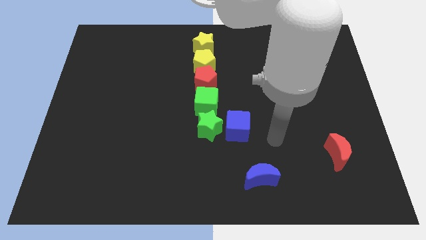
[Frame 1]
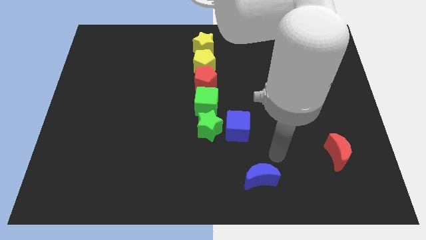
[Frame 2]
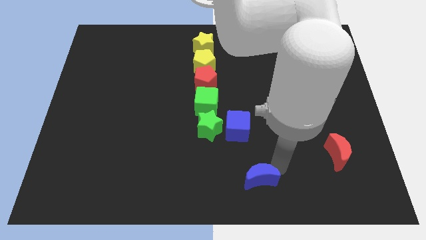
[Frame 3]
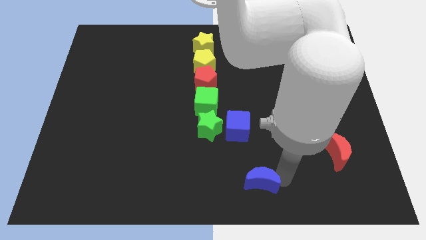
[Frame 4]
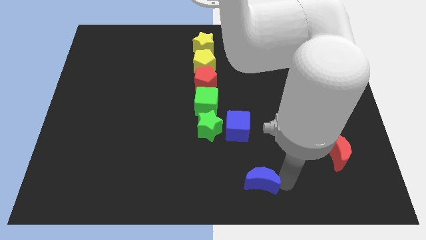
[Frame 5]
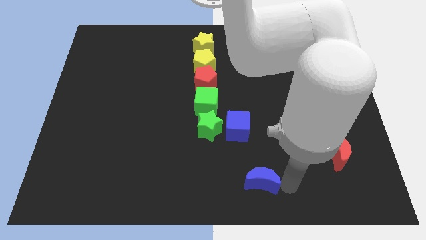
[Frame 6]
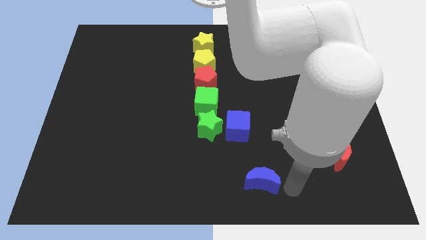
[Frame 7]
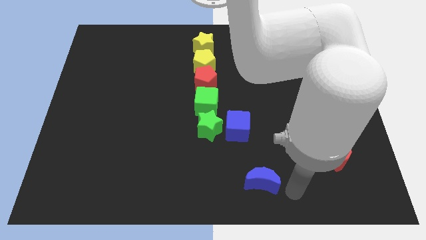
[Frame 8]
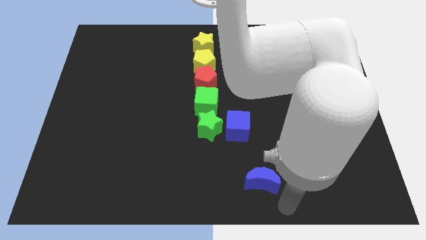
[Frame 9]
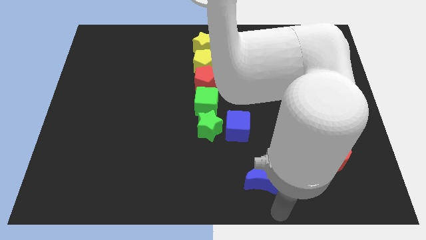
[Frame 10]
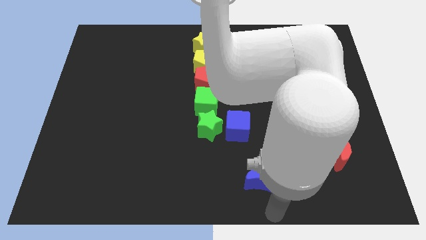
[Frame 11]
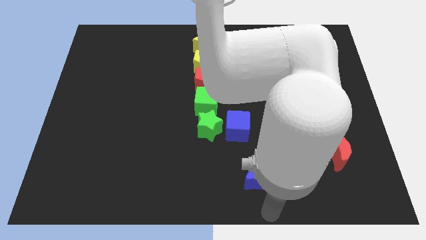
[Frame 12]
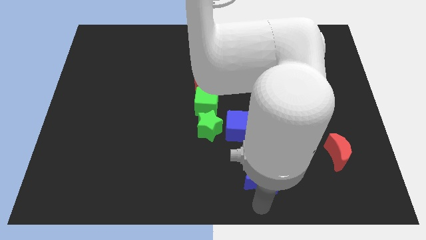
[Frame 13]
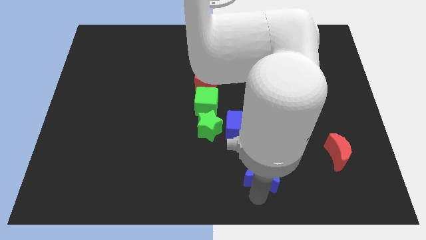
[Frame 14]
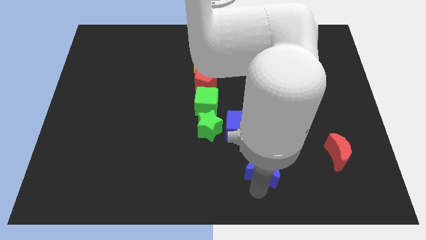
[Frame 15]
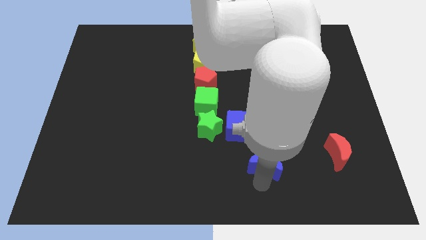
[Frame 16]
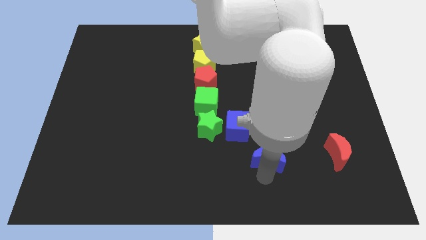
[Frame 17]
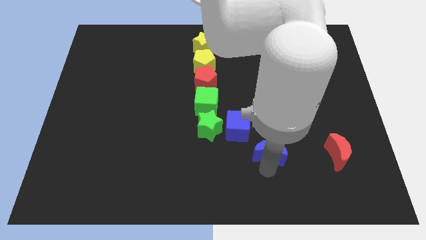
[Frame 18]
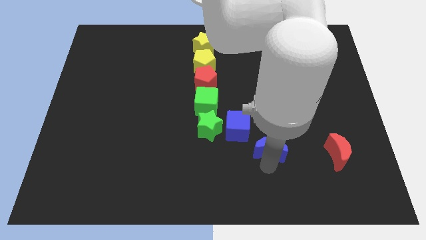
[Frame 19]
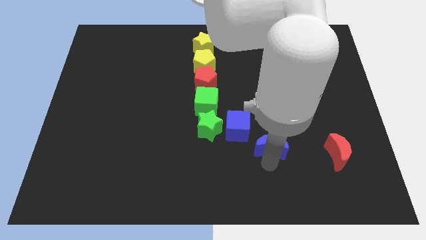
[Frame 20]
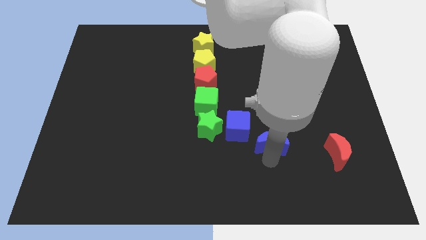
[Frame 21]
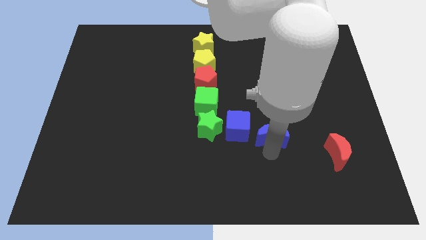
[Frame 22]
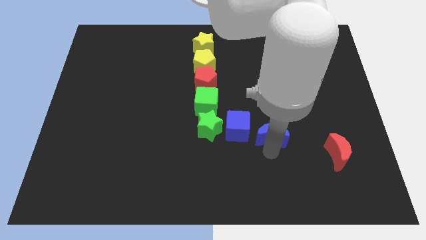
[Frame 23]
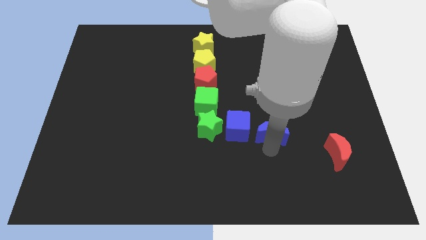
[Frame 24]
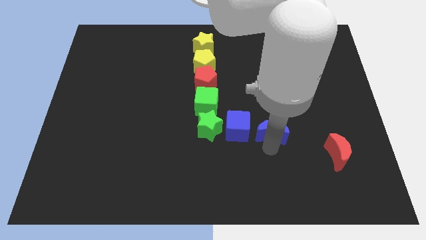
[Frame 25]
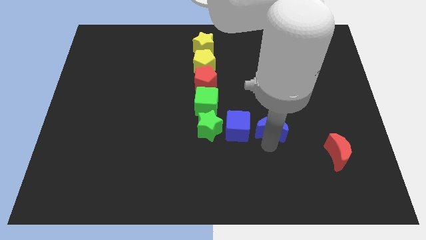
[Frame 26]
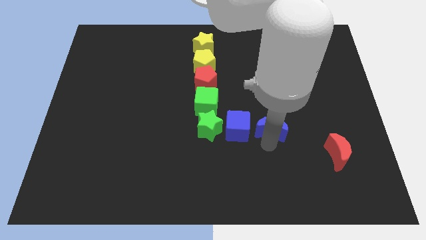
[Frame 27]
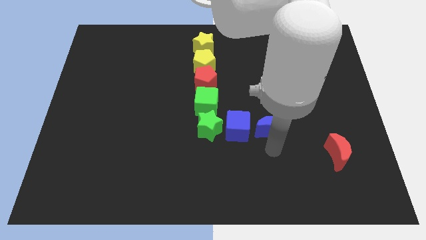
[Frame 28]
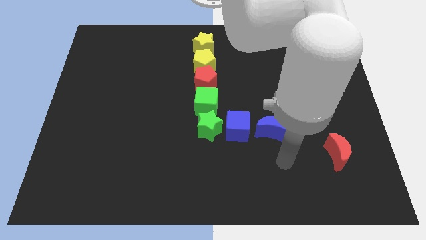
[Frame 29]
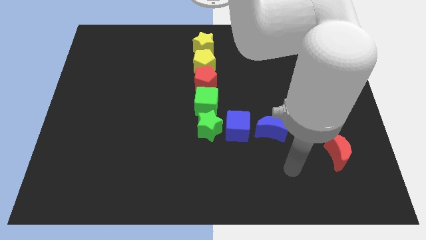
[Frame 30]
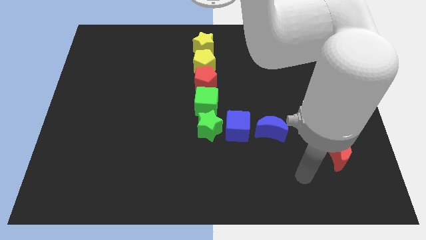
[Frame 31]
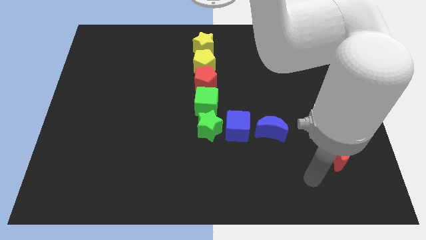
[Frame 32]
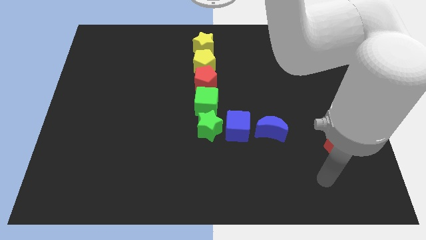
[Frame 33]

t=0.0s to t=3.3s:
push the blue moon parallel right to the blue cube

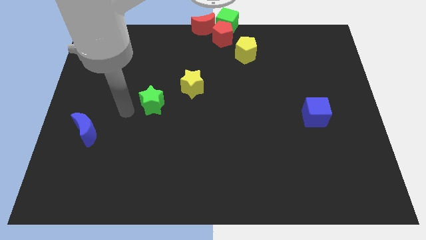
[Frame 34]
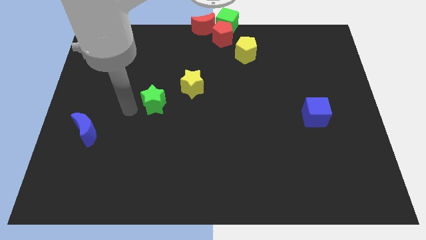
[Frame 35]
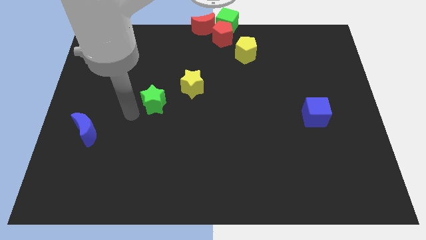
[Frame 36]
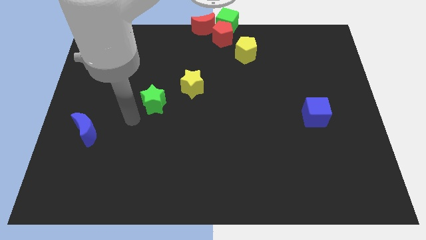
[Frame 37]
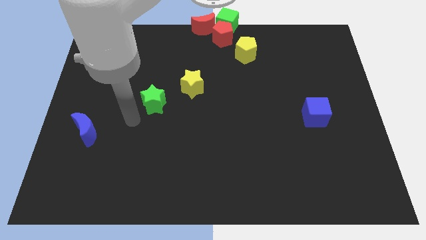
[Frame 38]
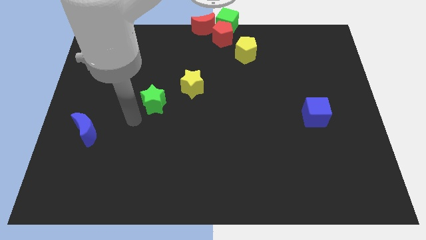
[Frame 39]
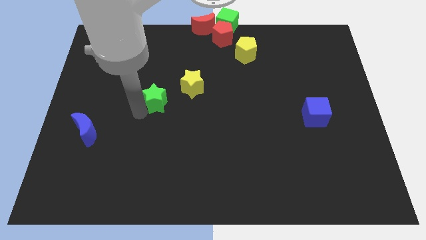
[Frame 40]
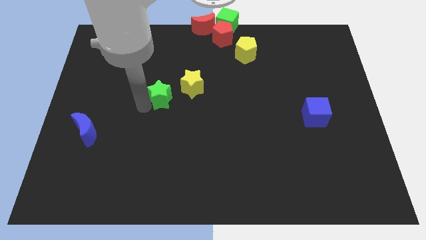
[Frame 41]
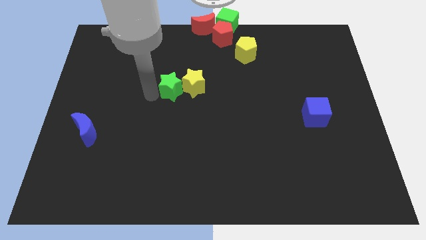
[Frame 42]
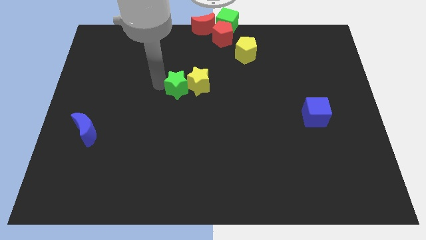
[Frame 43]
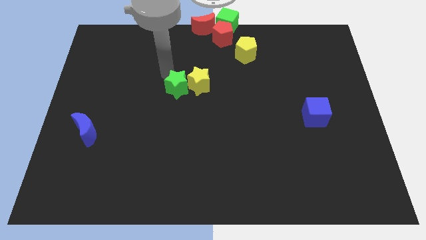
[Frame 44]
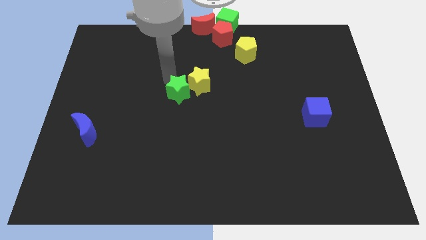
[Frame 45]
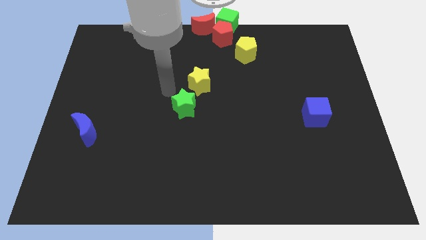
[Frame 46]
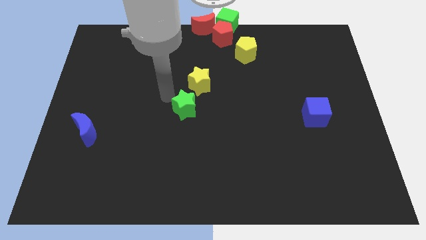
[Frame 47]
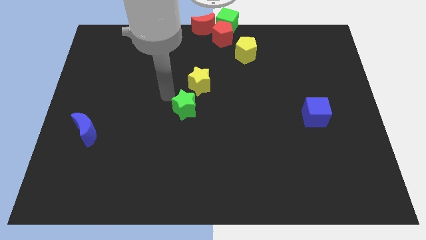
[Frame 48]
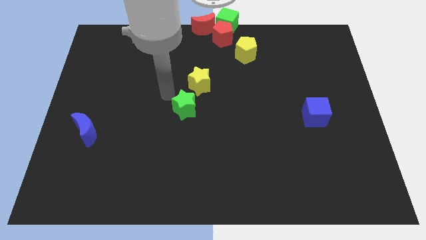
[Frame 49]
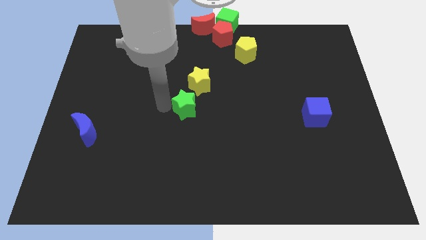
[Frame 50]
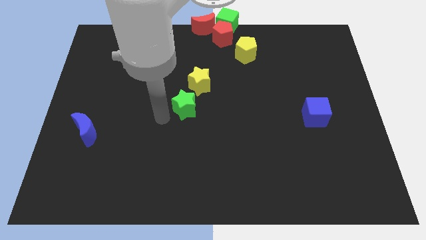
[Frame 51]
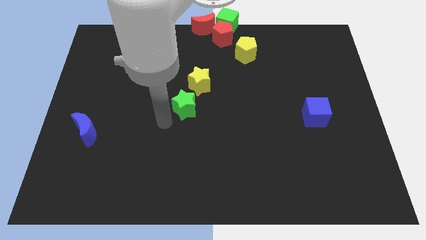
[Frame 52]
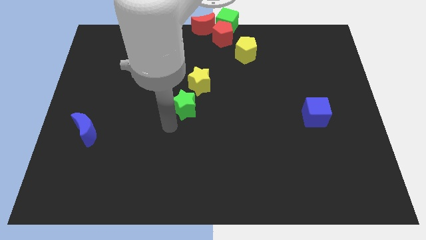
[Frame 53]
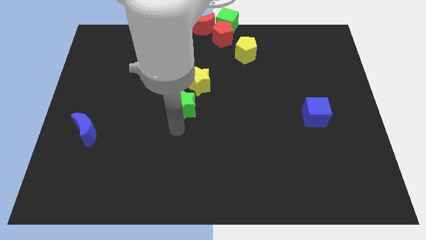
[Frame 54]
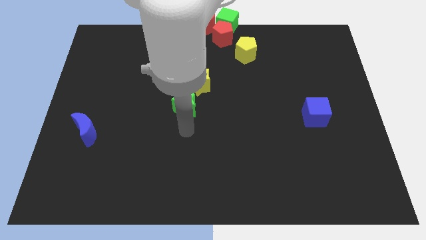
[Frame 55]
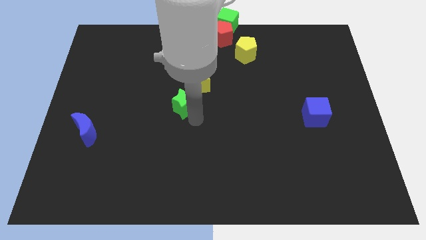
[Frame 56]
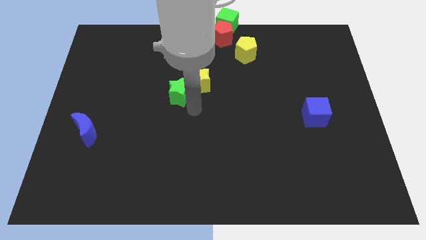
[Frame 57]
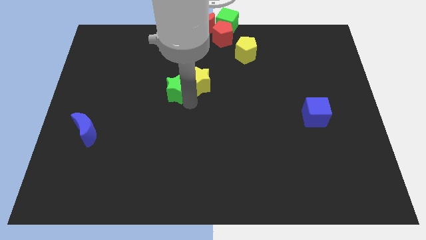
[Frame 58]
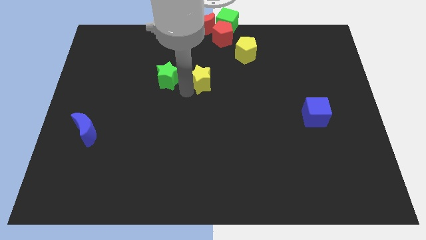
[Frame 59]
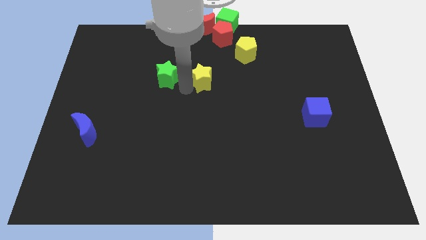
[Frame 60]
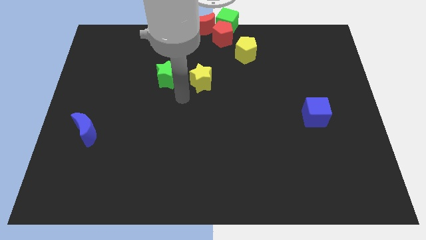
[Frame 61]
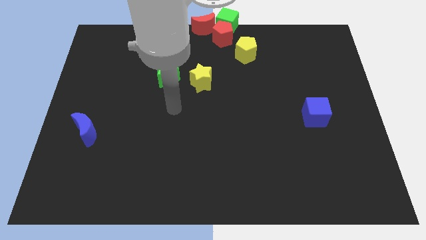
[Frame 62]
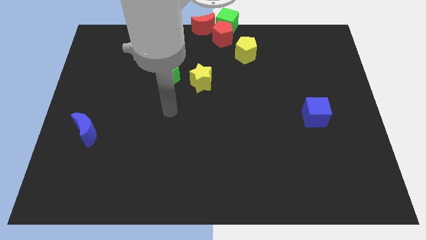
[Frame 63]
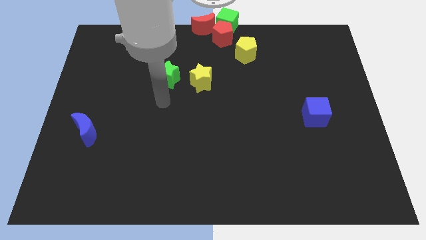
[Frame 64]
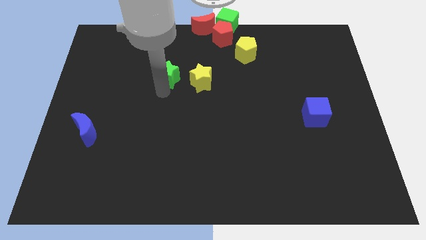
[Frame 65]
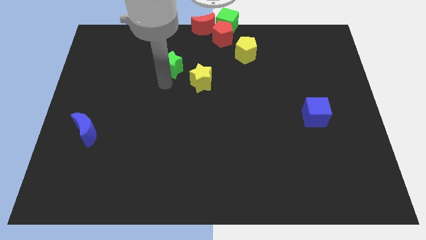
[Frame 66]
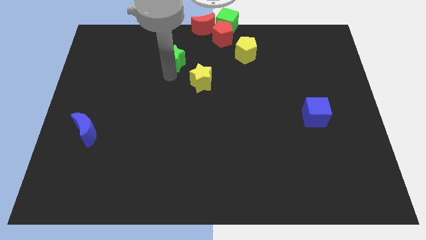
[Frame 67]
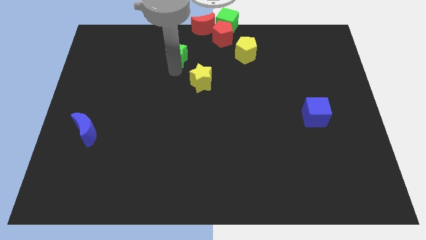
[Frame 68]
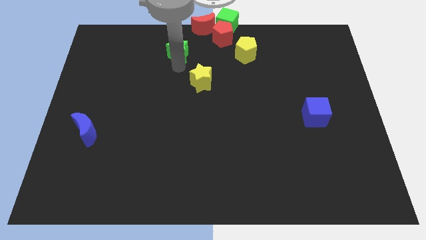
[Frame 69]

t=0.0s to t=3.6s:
place the green star parallel to the left side of the yellow pentagon

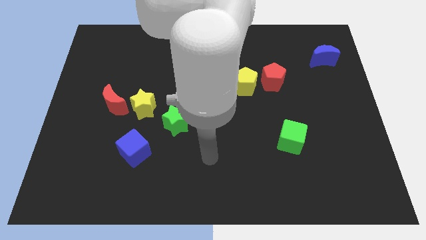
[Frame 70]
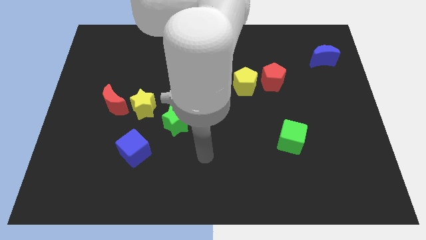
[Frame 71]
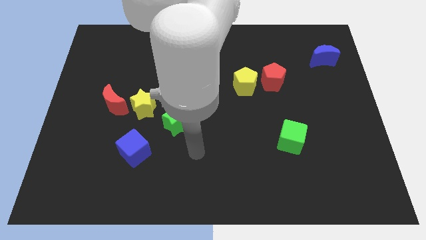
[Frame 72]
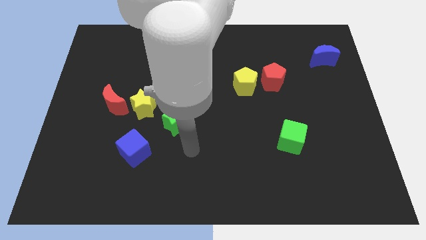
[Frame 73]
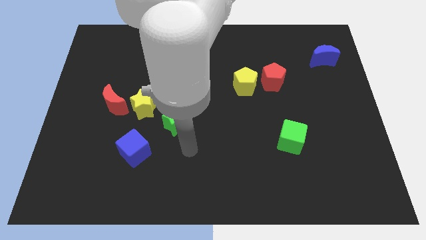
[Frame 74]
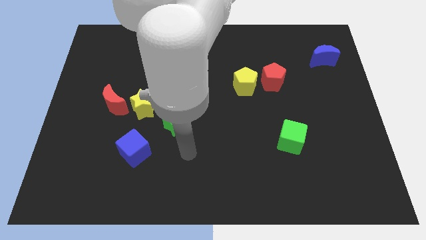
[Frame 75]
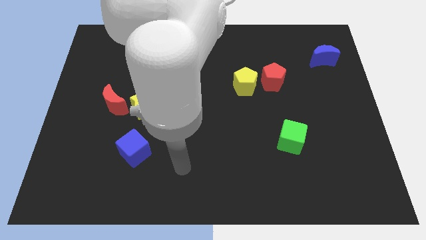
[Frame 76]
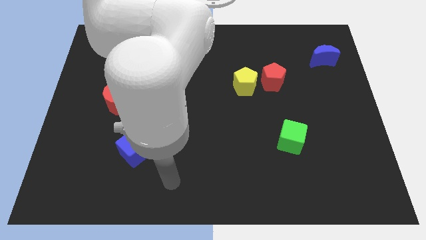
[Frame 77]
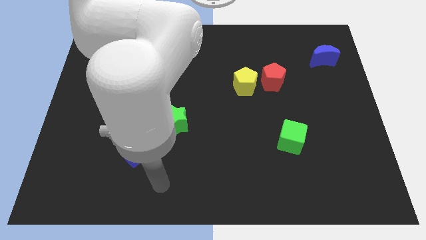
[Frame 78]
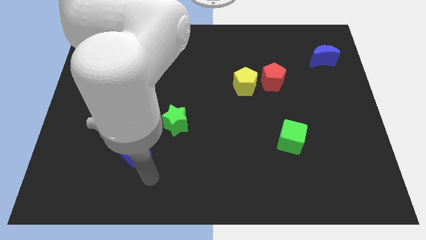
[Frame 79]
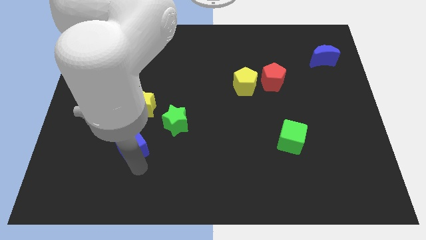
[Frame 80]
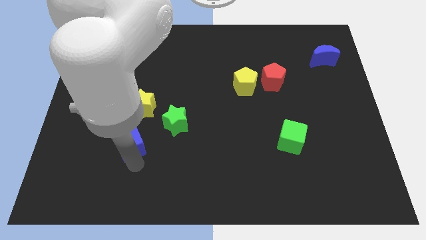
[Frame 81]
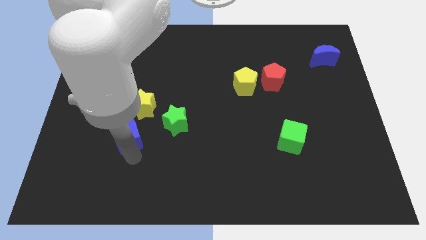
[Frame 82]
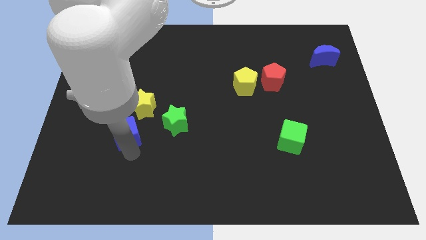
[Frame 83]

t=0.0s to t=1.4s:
move the blue cube towards top of the board

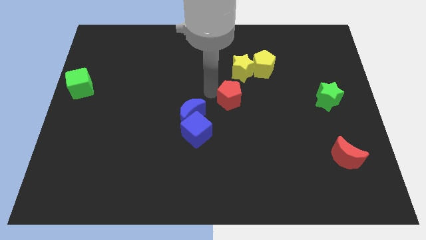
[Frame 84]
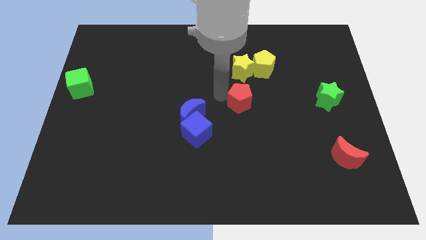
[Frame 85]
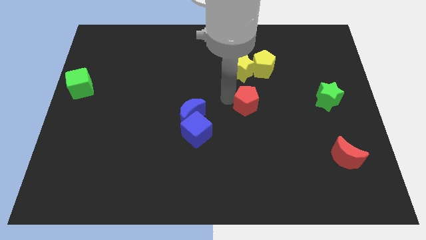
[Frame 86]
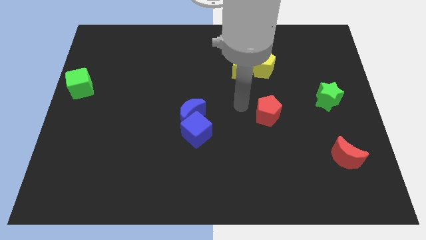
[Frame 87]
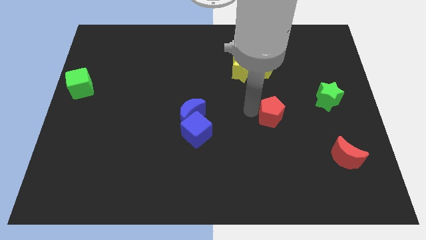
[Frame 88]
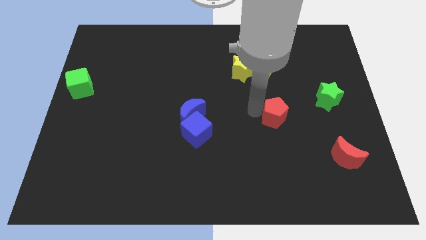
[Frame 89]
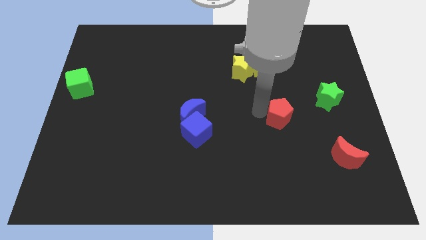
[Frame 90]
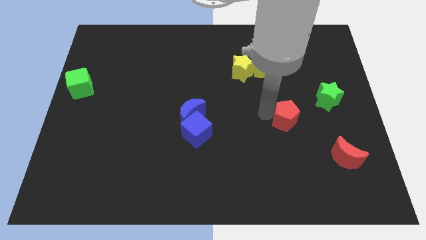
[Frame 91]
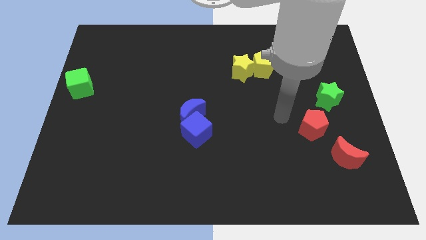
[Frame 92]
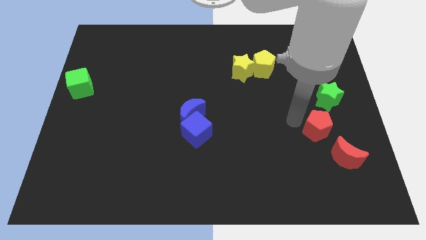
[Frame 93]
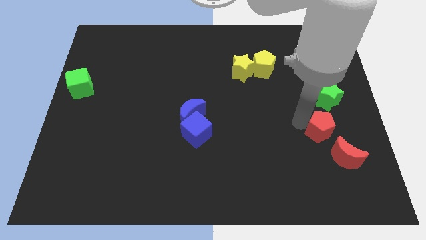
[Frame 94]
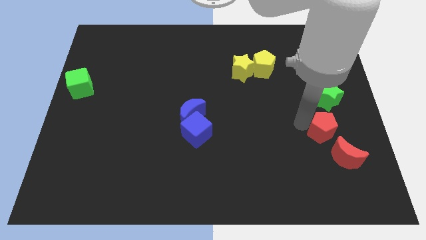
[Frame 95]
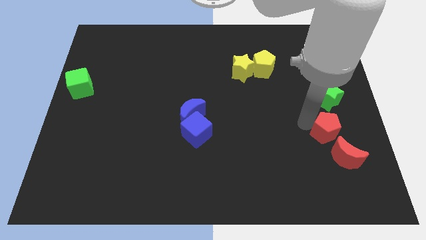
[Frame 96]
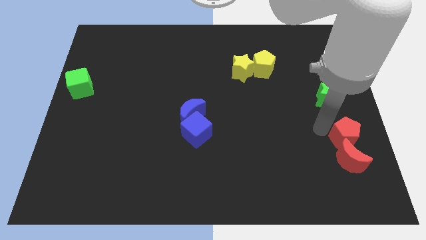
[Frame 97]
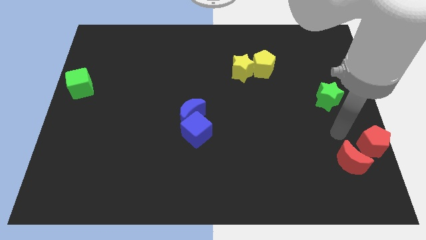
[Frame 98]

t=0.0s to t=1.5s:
push the red pentagon into the red crescent
